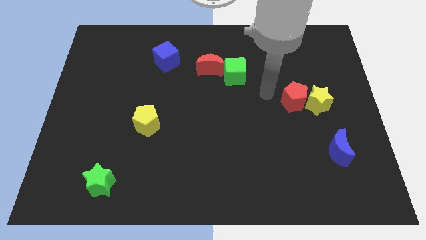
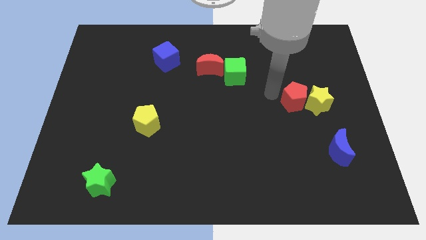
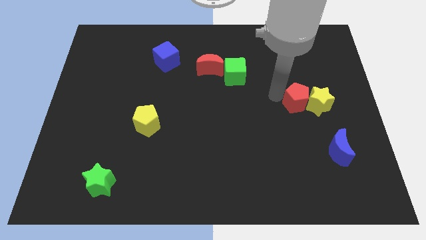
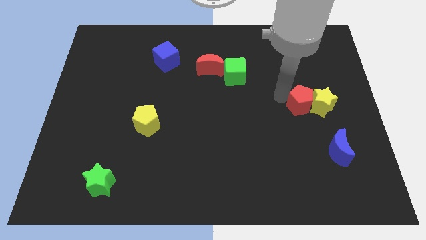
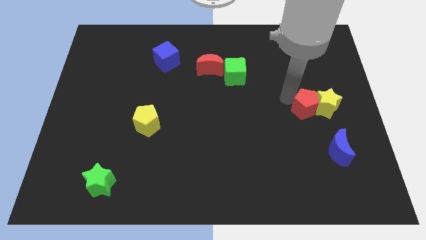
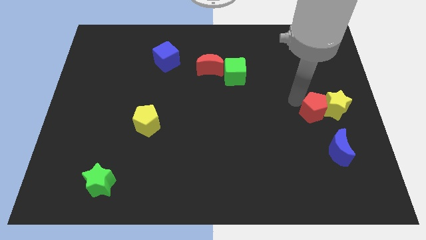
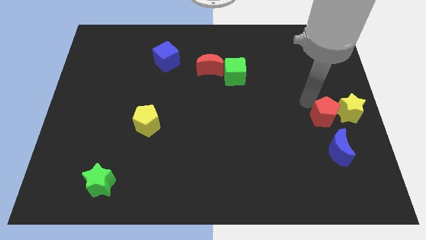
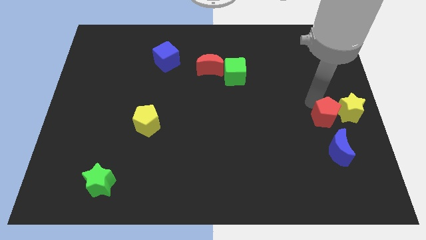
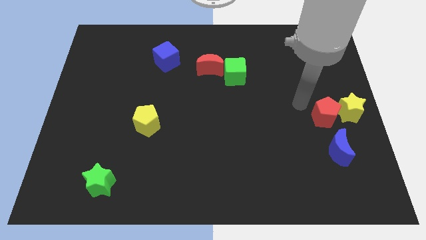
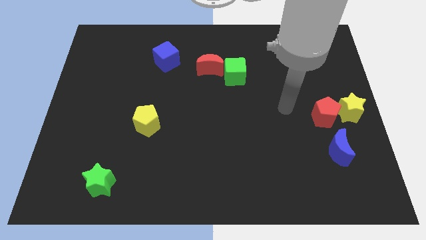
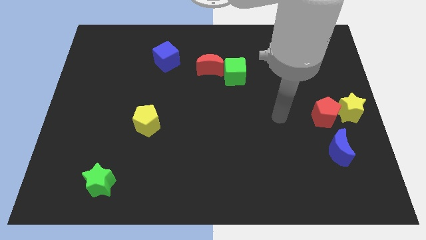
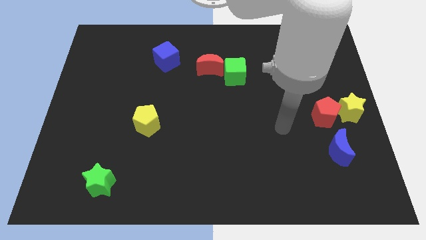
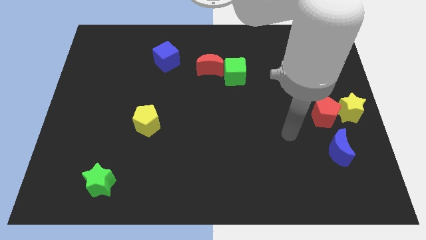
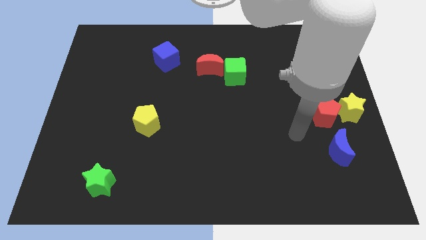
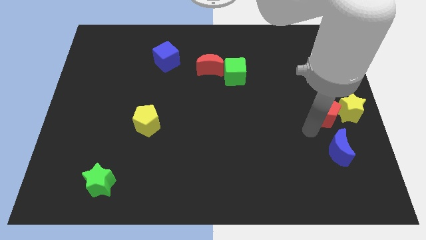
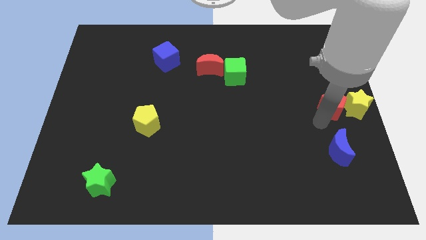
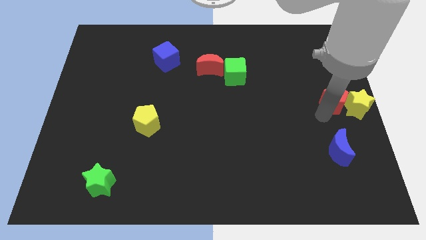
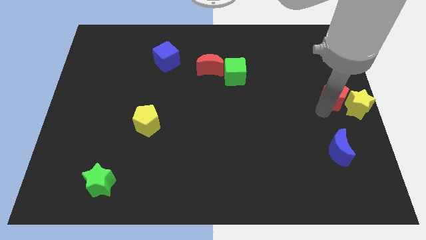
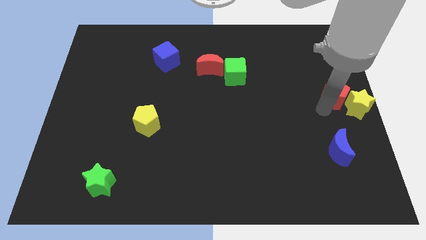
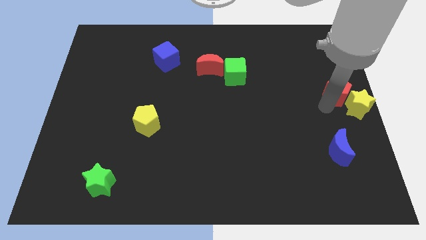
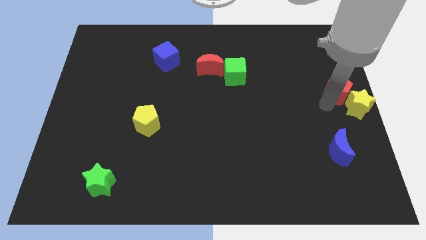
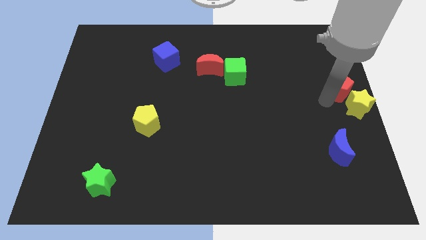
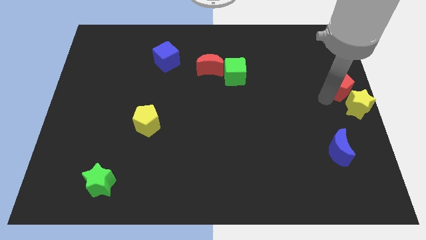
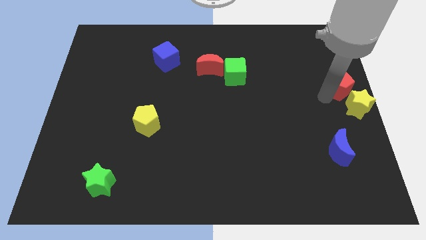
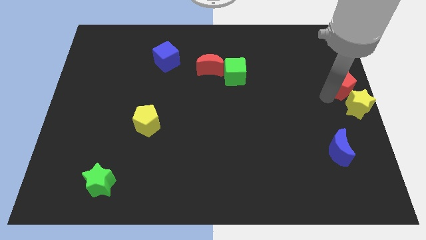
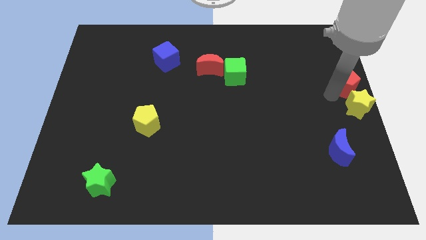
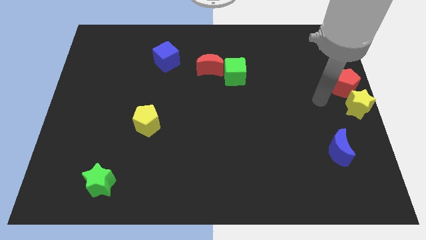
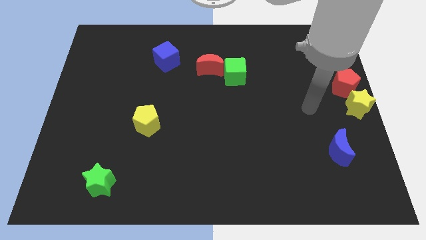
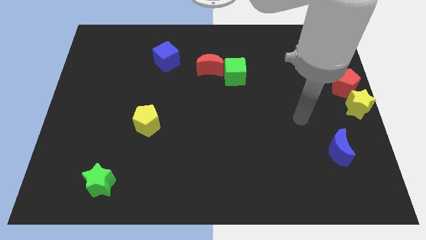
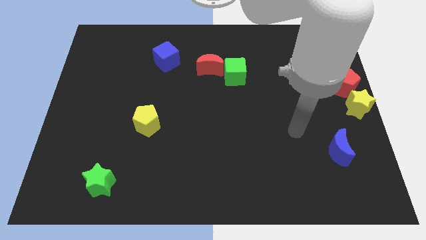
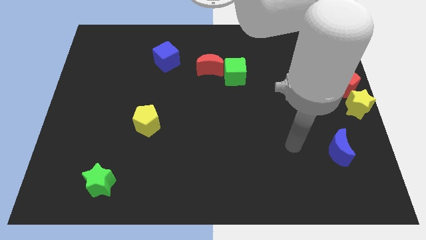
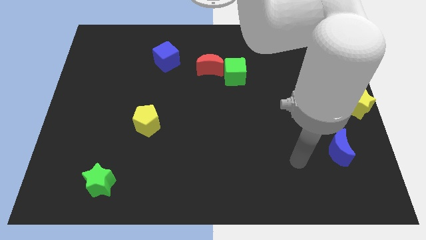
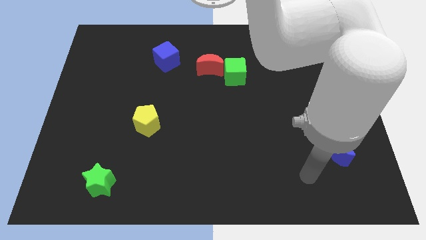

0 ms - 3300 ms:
push the yellow star with the help of red pentagon to the center right of the board

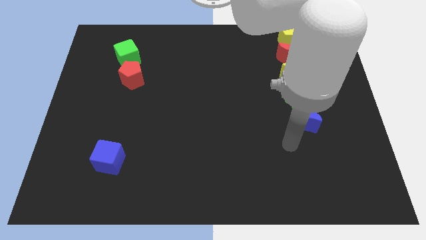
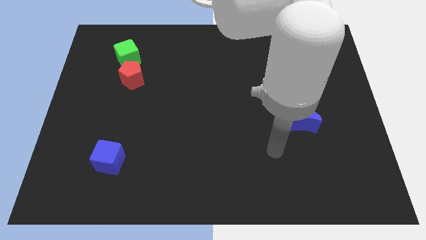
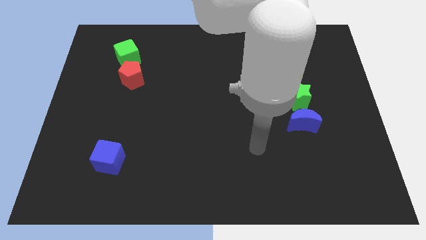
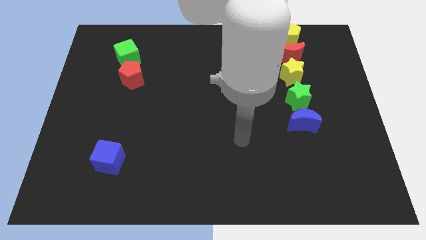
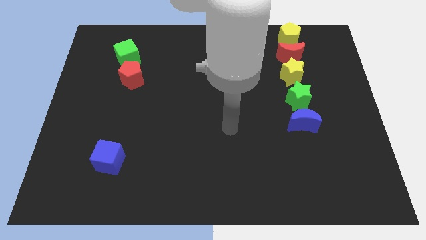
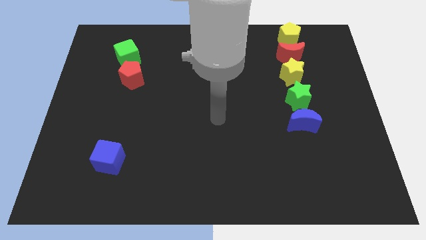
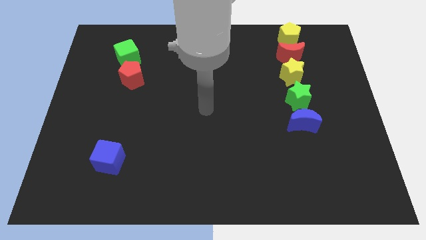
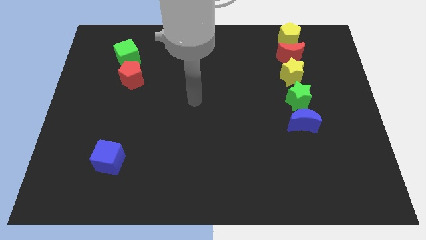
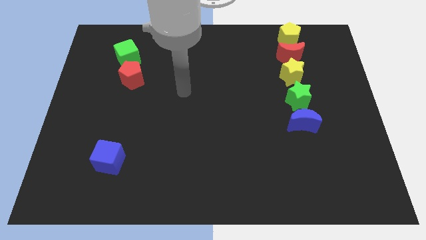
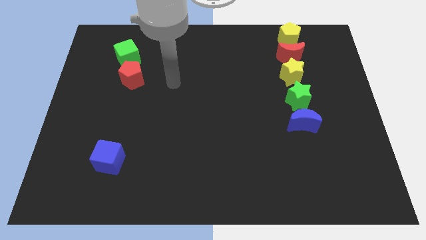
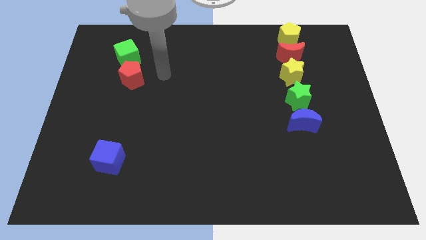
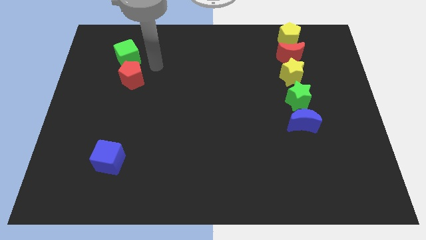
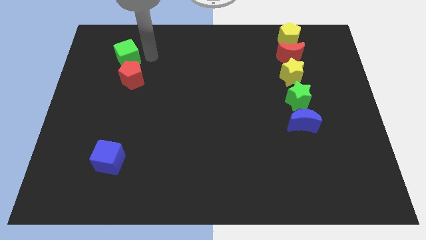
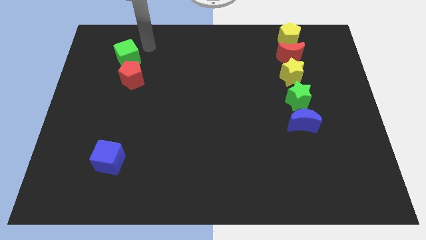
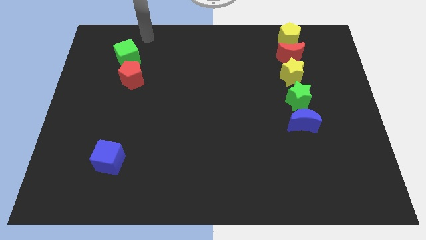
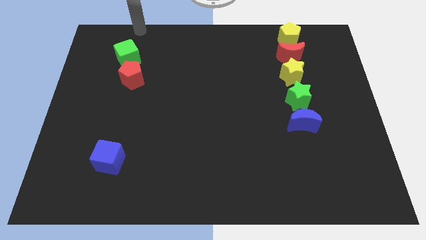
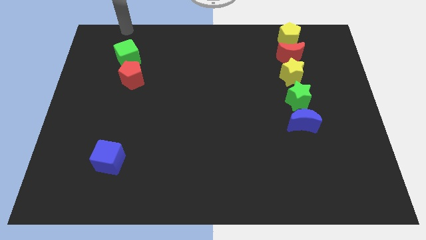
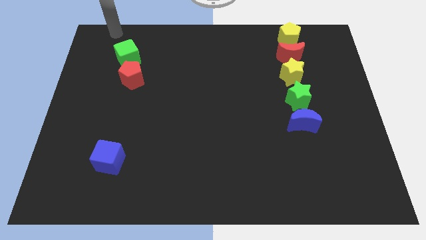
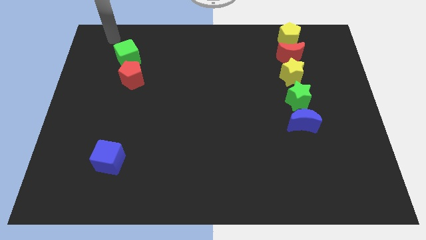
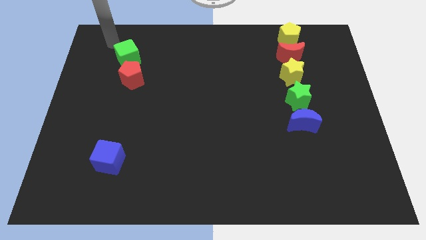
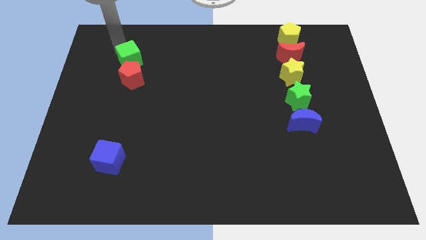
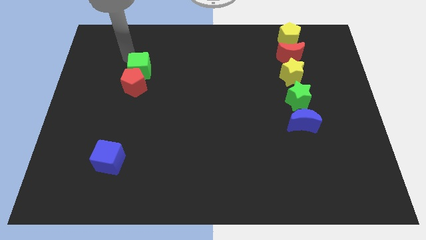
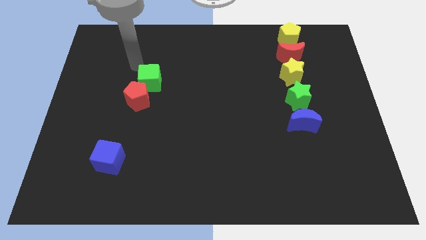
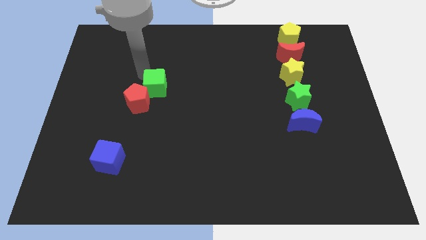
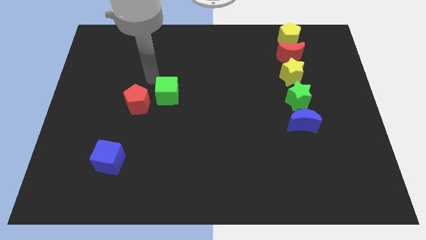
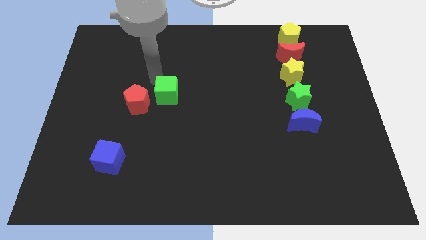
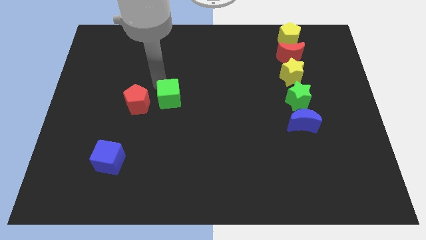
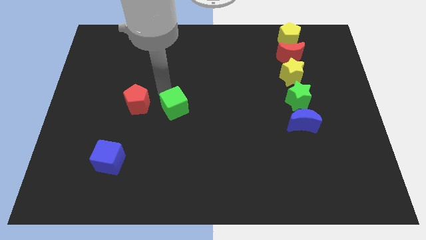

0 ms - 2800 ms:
push the green cube to the right of the red pentagon

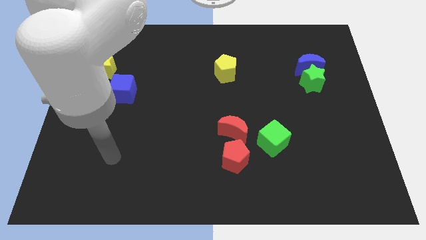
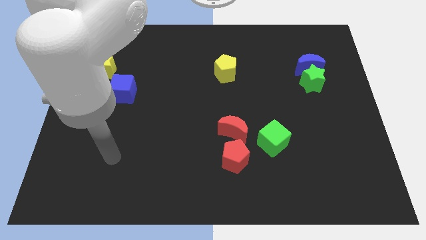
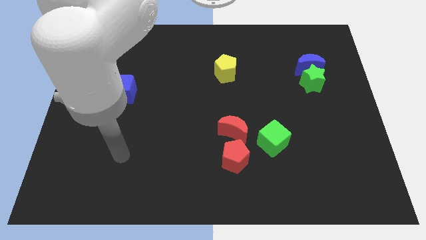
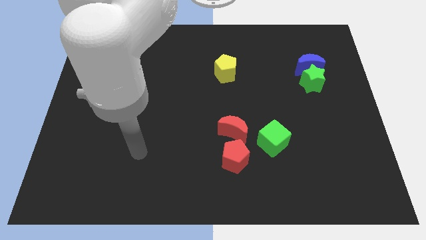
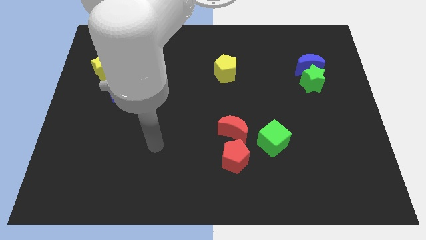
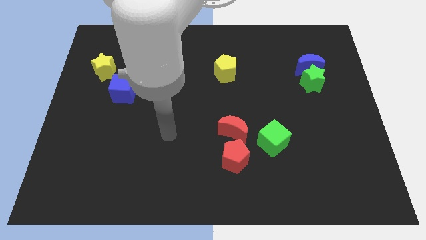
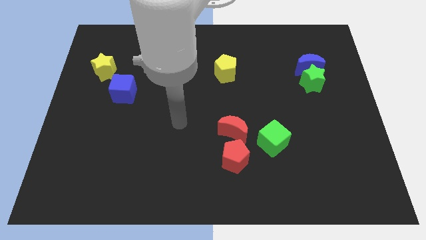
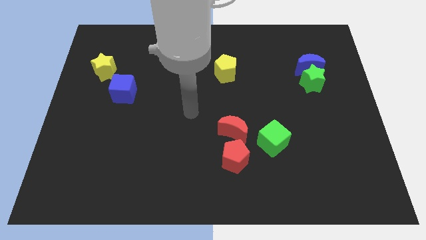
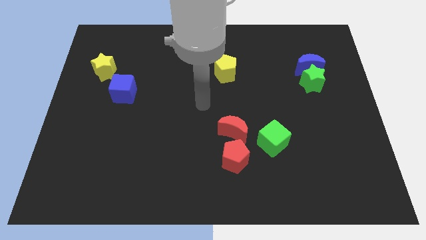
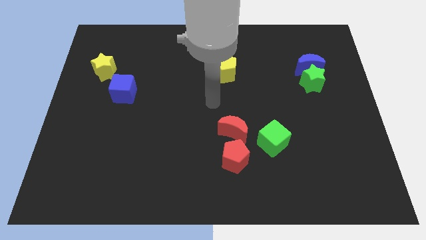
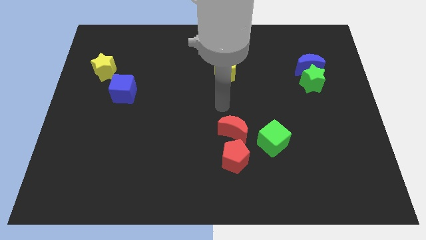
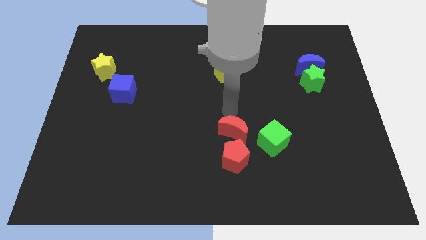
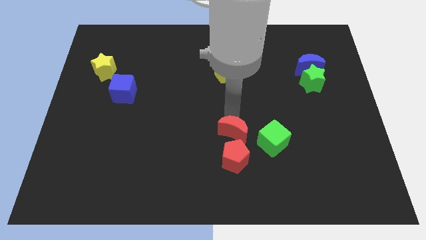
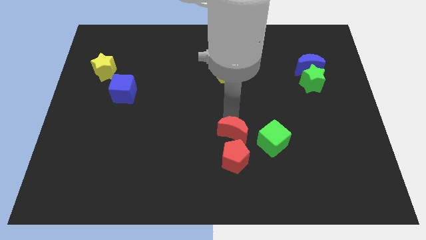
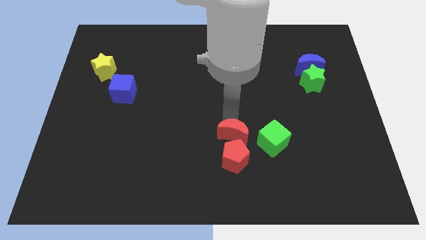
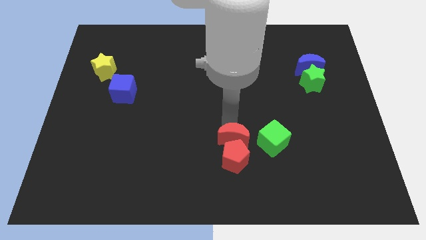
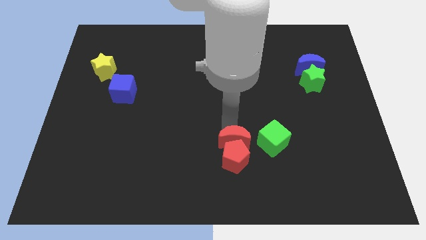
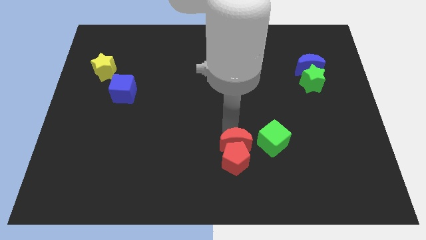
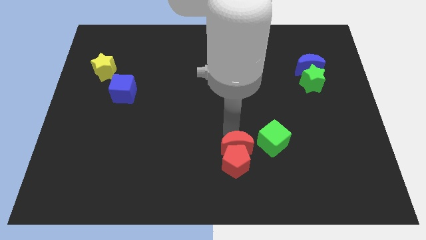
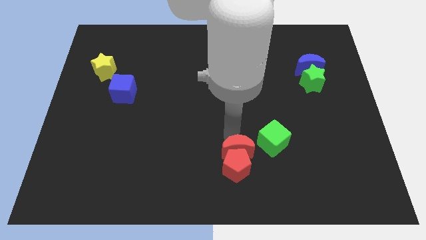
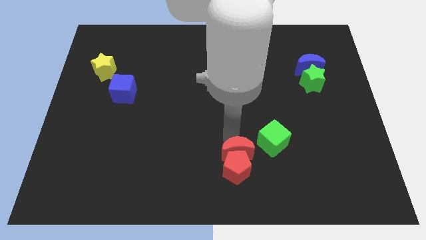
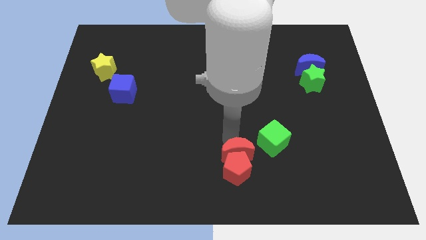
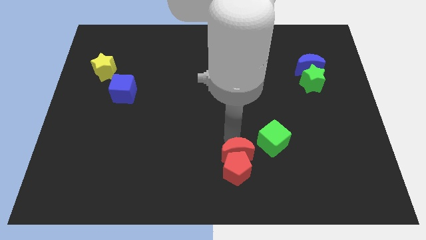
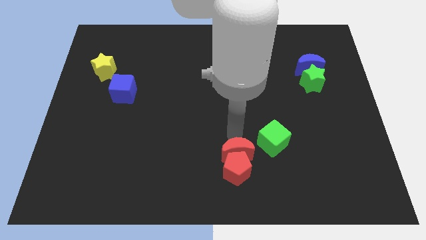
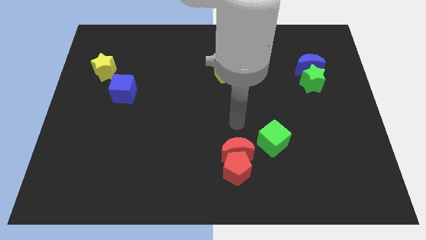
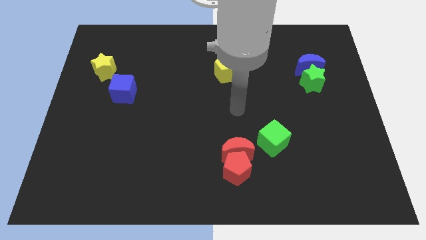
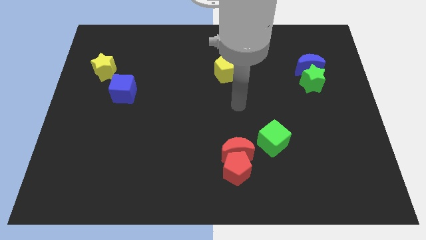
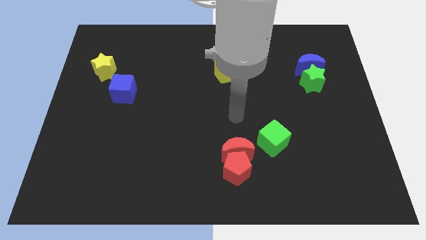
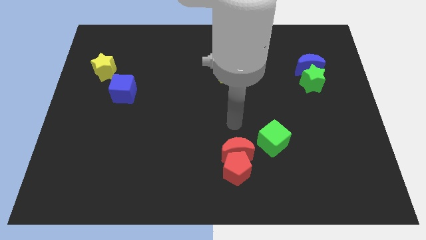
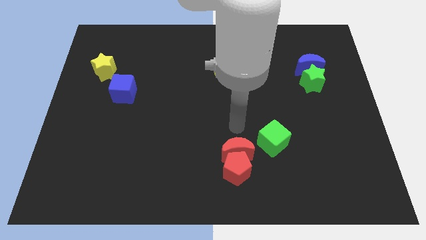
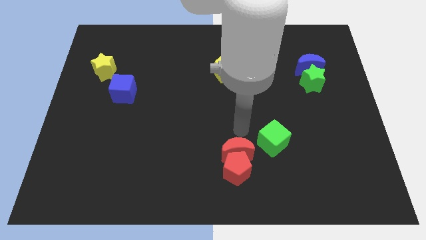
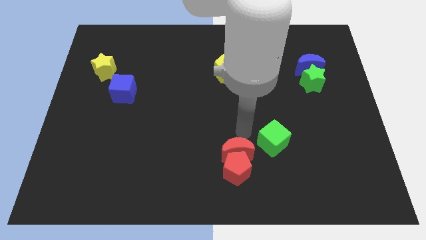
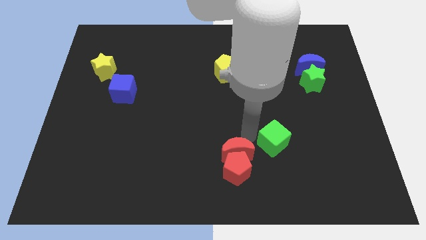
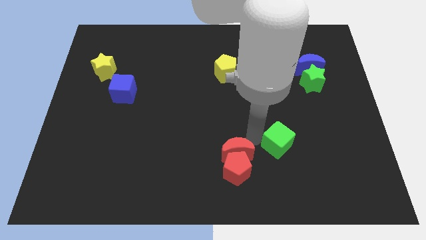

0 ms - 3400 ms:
push the red crescent into the red pentagon
